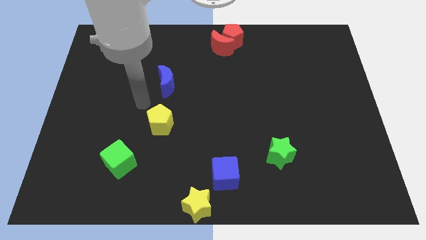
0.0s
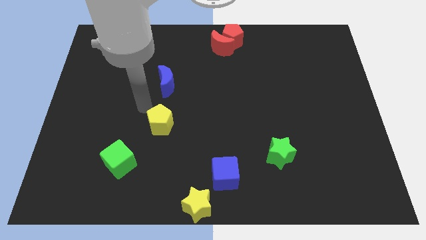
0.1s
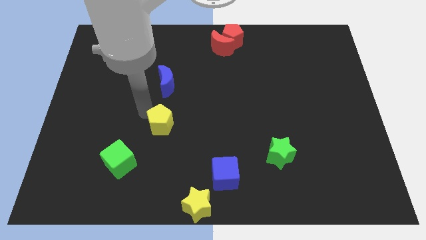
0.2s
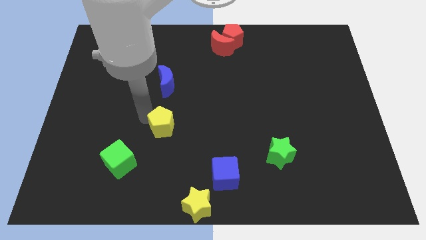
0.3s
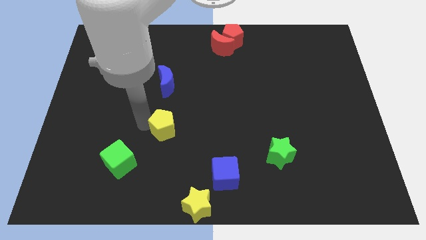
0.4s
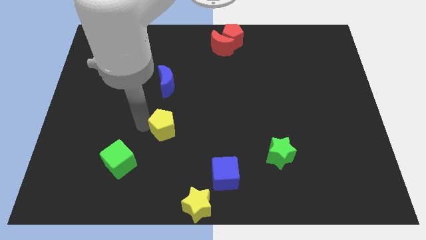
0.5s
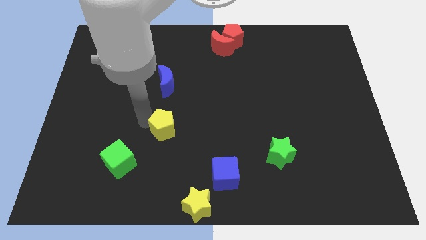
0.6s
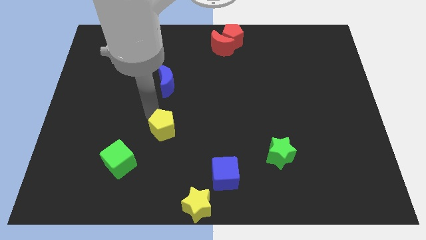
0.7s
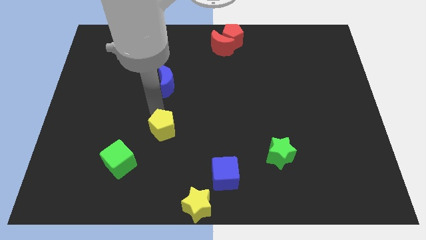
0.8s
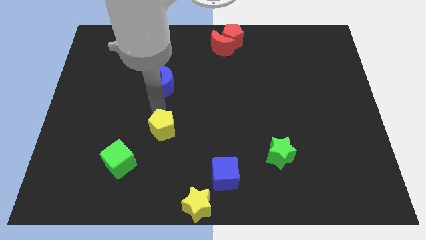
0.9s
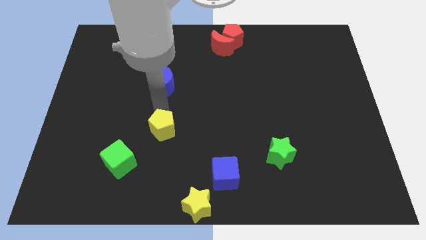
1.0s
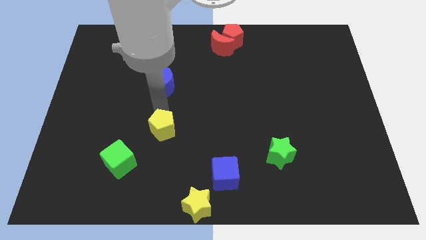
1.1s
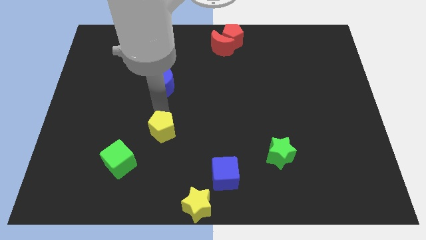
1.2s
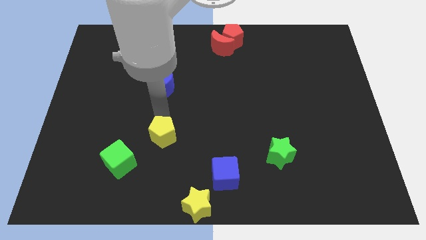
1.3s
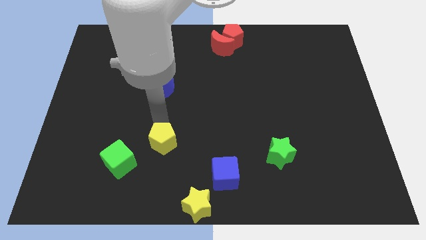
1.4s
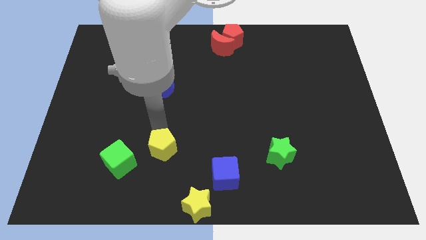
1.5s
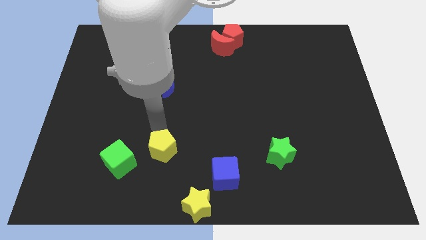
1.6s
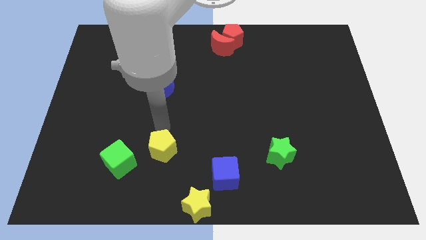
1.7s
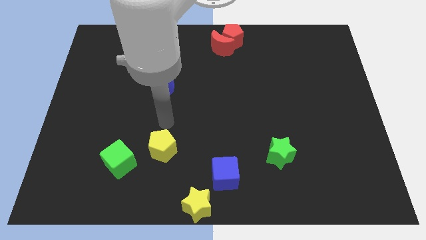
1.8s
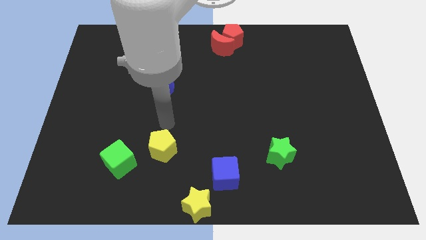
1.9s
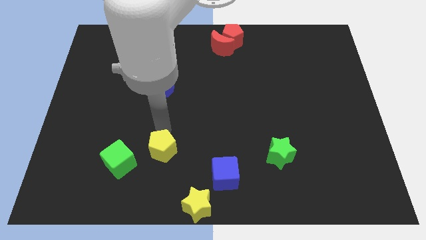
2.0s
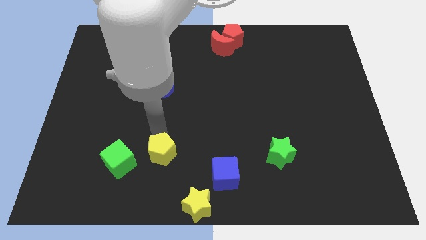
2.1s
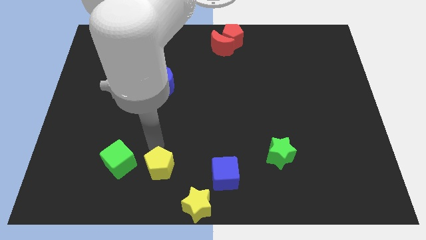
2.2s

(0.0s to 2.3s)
place the yellow pentagon vertically below blue crescent

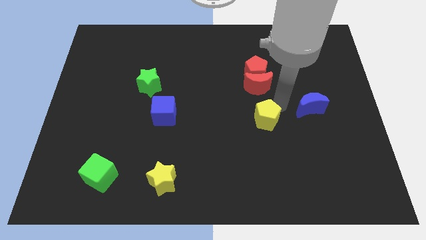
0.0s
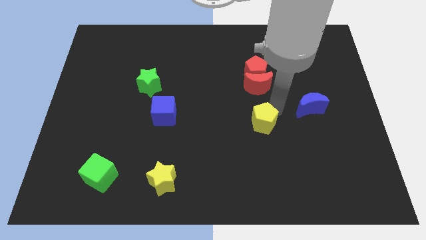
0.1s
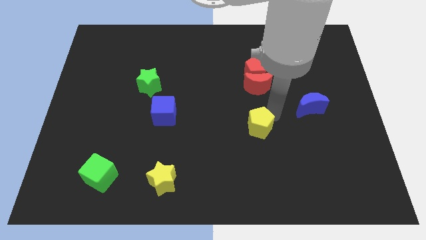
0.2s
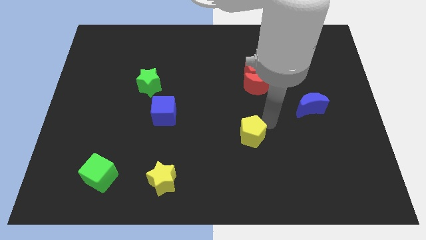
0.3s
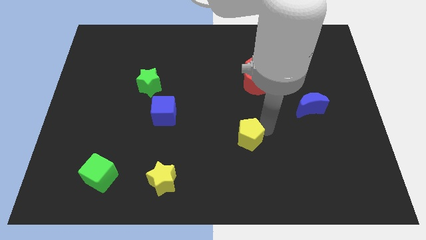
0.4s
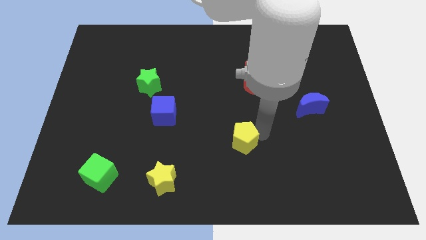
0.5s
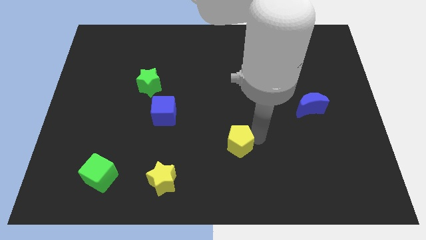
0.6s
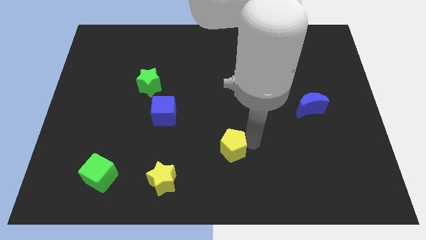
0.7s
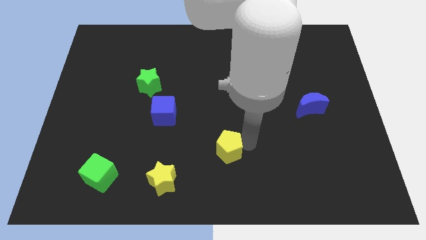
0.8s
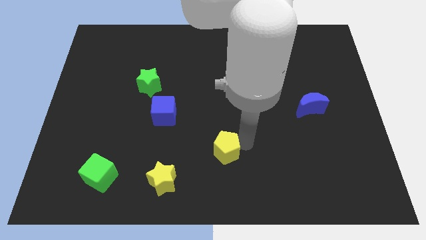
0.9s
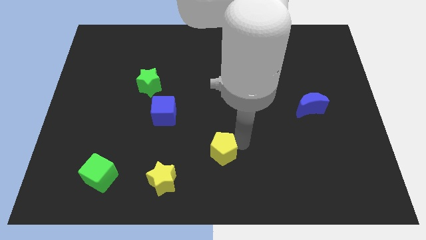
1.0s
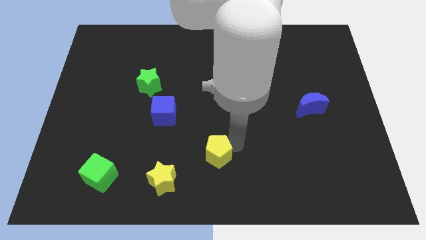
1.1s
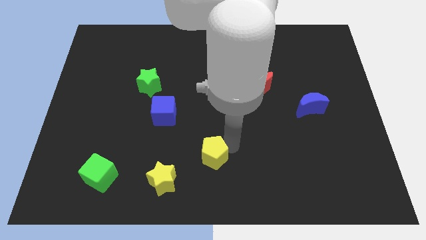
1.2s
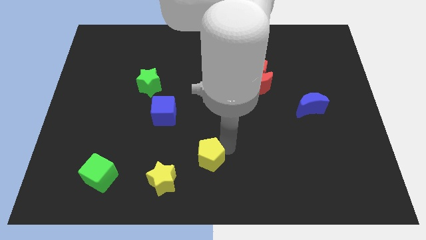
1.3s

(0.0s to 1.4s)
move the yellow pentagon to the bottom center

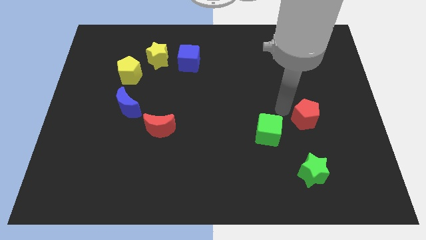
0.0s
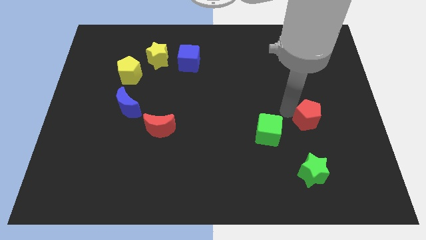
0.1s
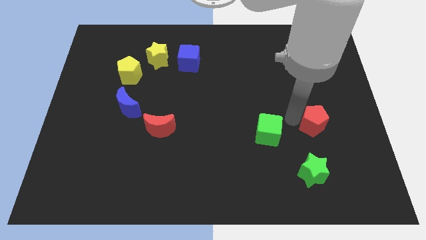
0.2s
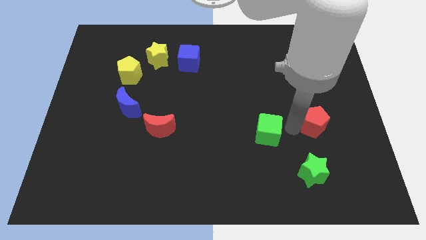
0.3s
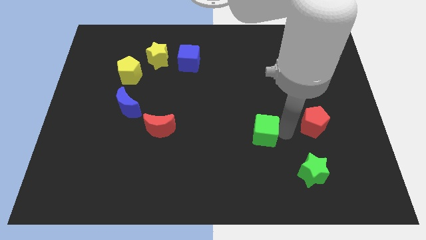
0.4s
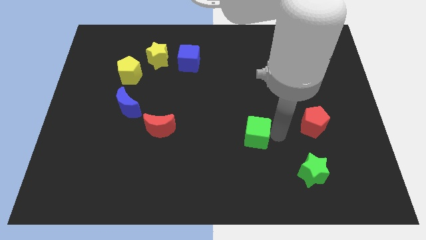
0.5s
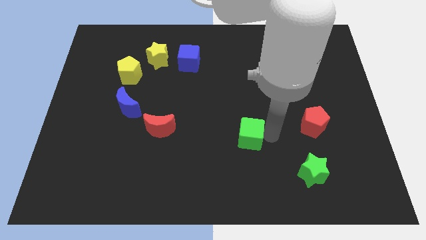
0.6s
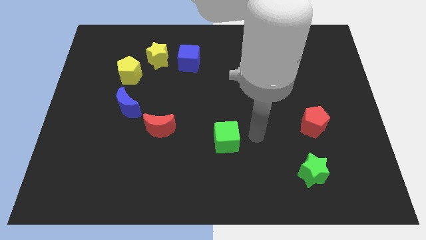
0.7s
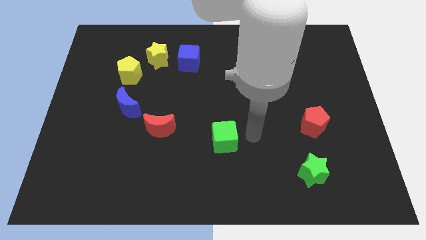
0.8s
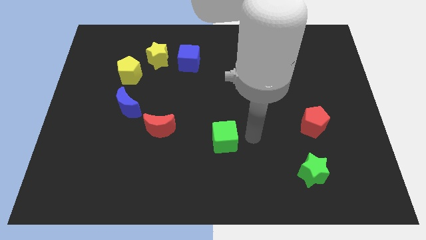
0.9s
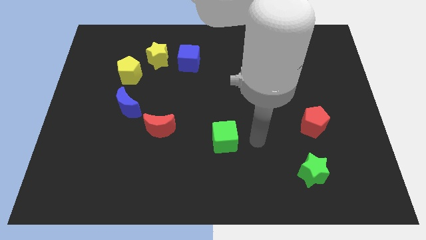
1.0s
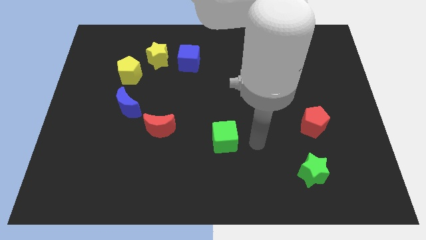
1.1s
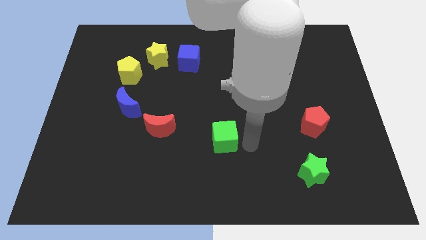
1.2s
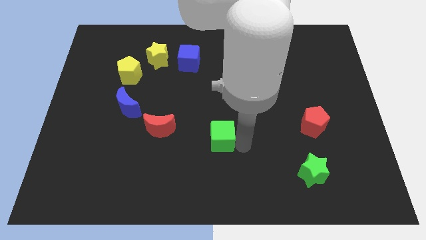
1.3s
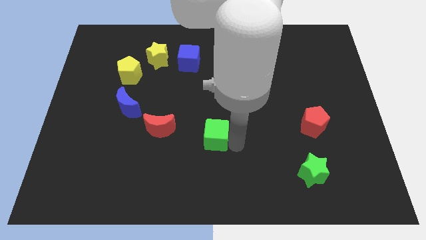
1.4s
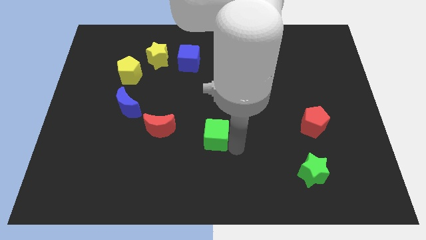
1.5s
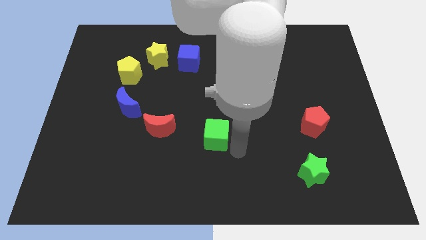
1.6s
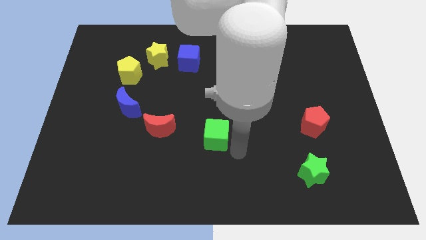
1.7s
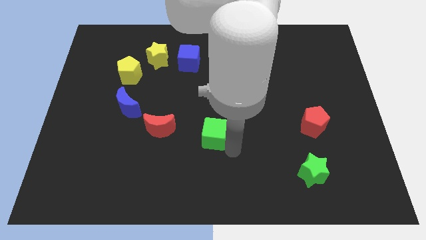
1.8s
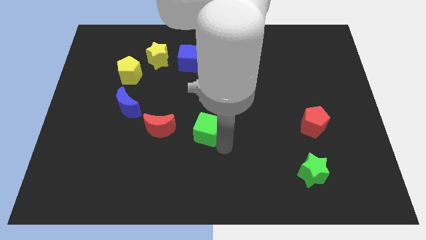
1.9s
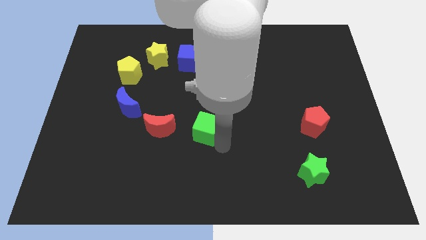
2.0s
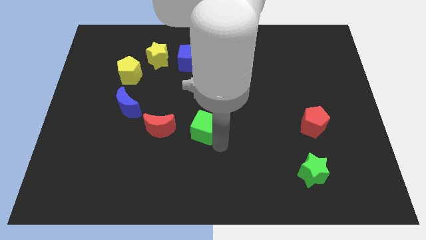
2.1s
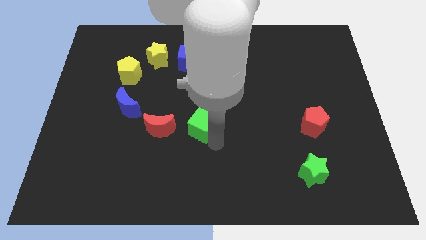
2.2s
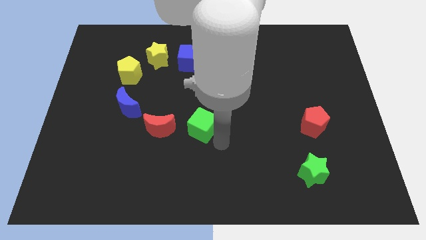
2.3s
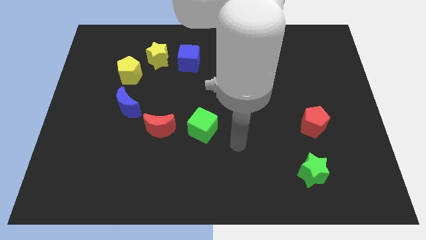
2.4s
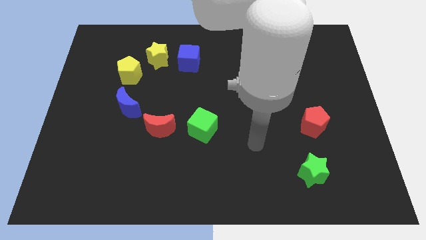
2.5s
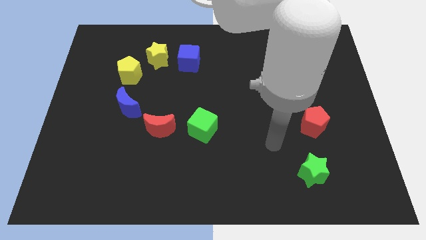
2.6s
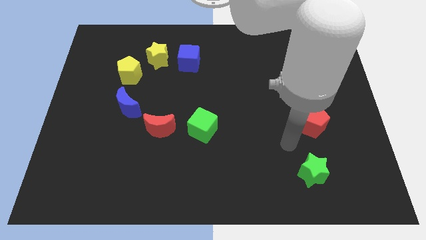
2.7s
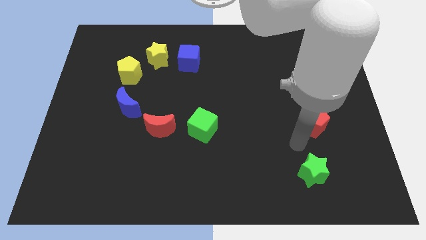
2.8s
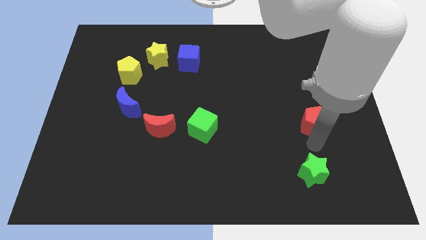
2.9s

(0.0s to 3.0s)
place the green cube to the right of red moon

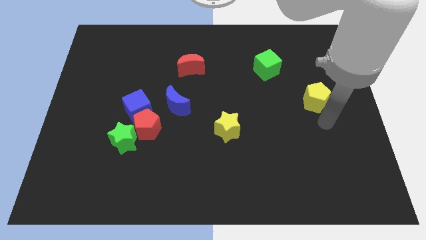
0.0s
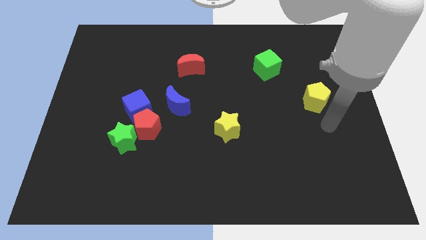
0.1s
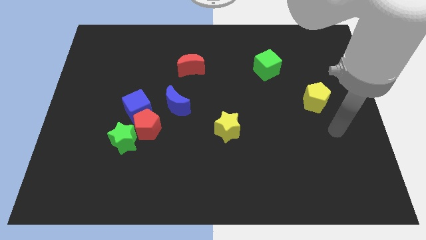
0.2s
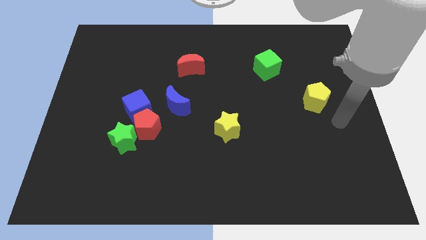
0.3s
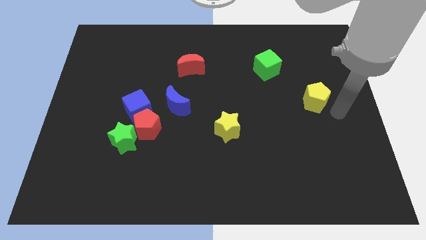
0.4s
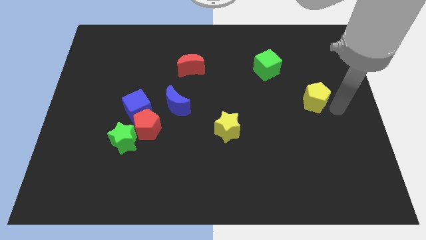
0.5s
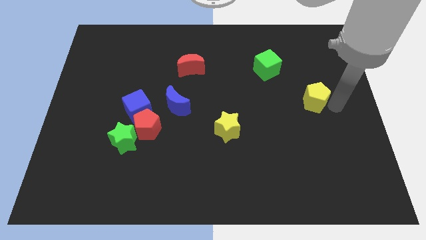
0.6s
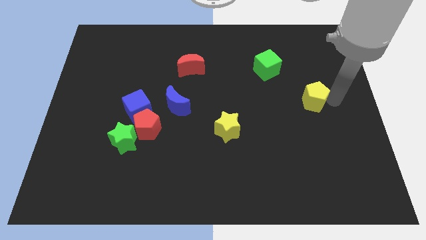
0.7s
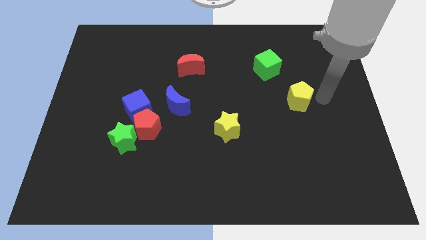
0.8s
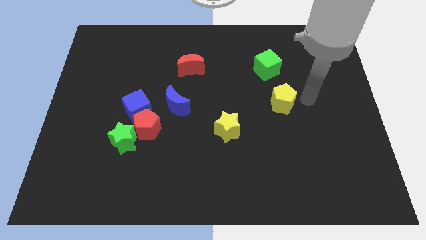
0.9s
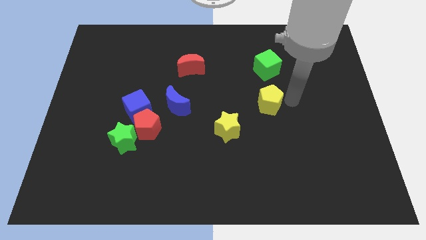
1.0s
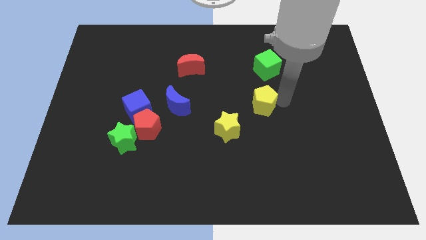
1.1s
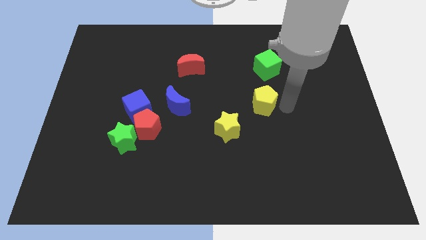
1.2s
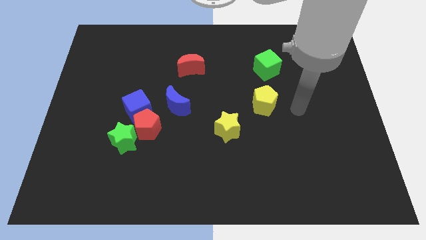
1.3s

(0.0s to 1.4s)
push the yellow pentagon vertically to the green cube

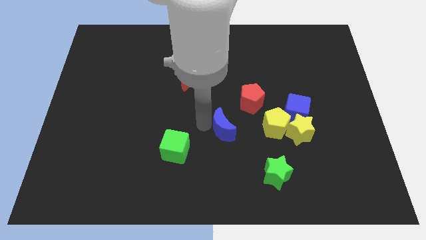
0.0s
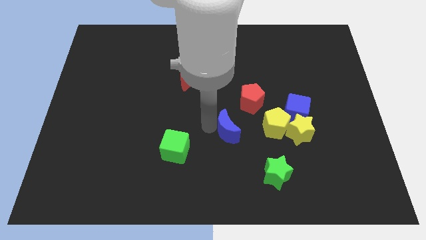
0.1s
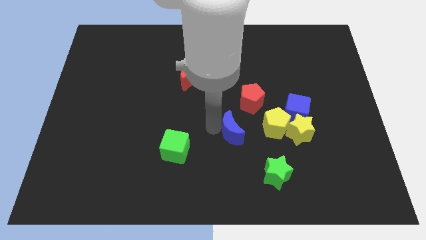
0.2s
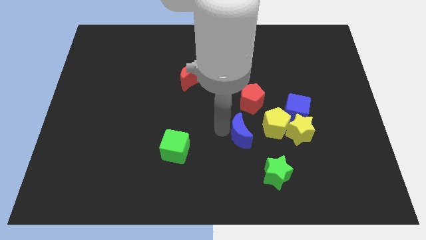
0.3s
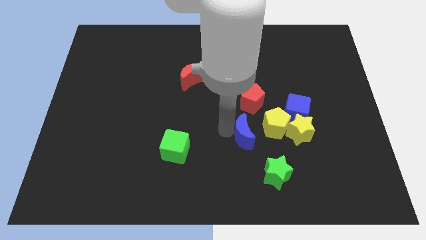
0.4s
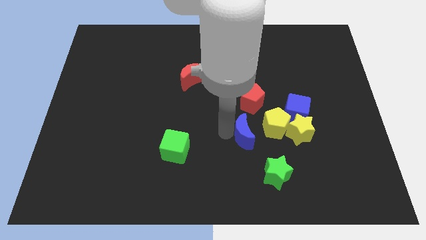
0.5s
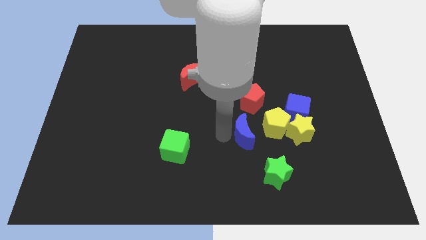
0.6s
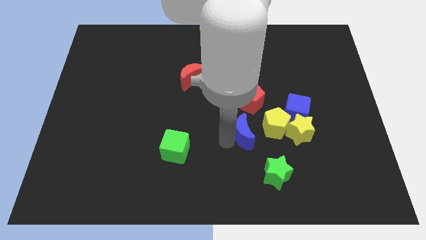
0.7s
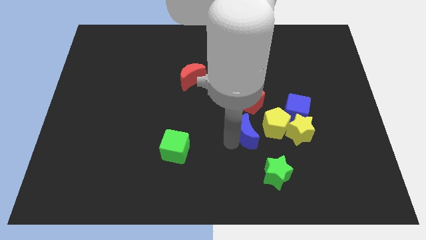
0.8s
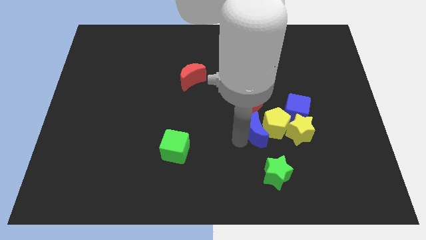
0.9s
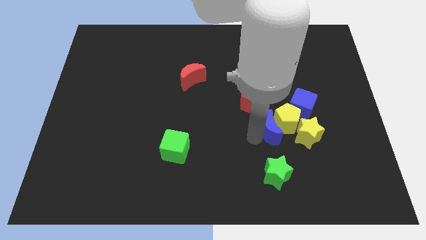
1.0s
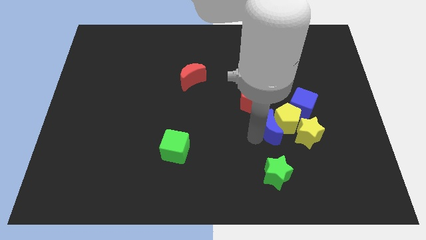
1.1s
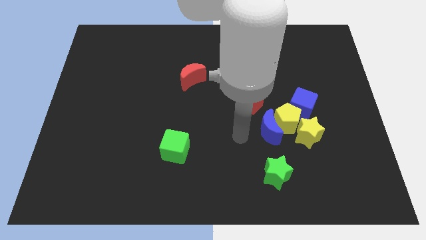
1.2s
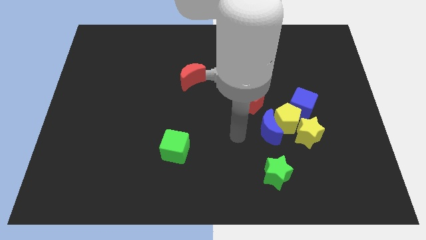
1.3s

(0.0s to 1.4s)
move blue moon into the yellow pentagon
